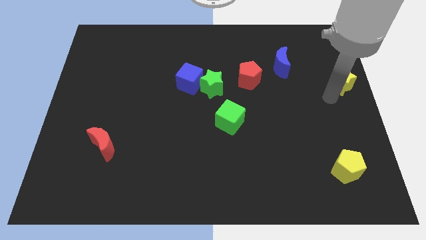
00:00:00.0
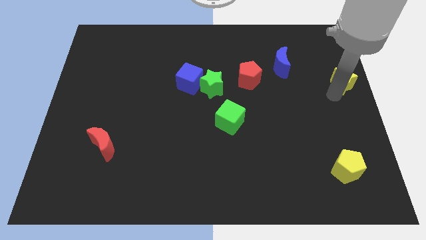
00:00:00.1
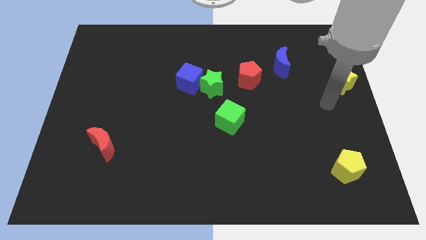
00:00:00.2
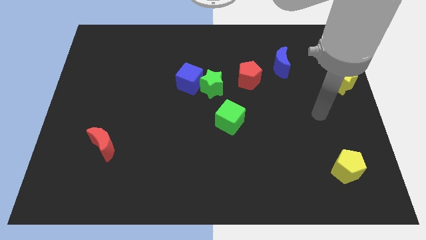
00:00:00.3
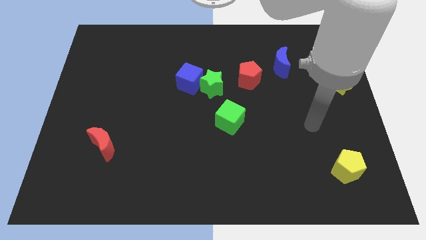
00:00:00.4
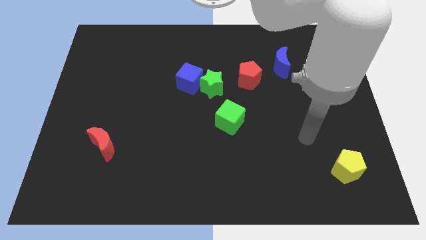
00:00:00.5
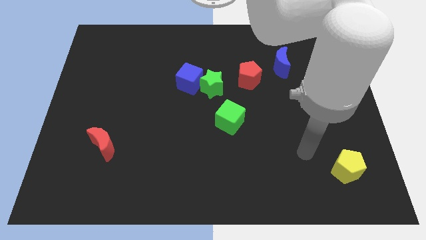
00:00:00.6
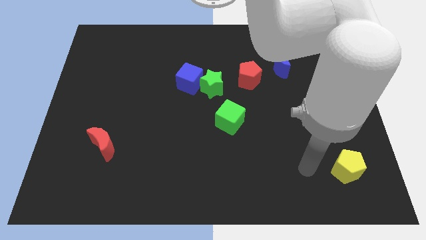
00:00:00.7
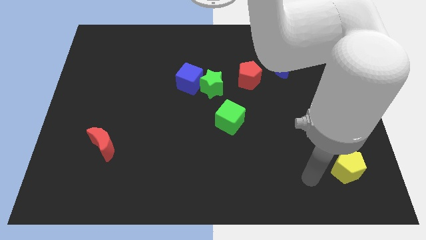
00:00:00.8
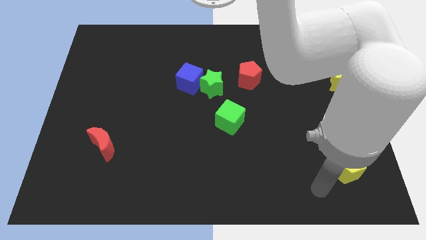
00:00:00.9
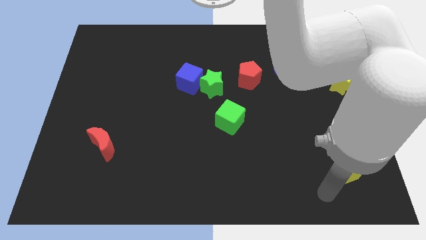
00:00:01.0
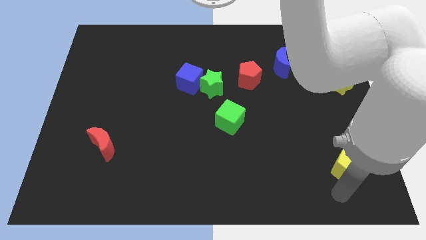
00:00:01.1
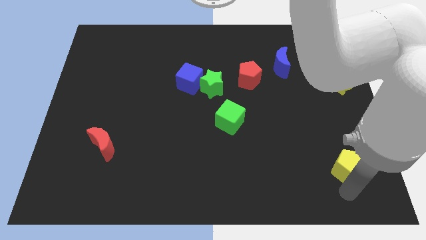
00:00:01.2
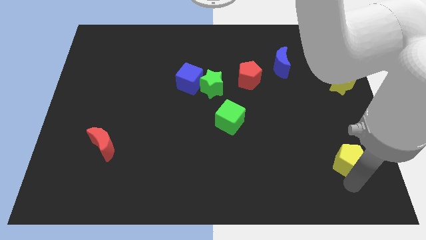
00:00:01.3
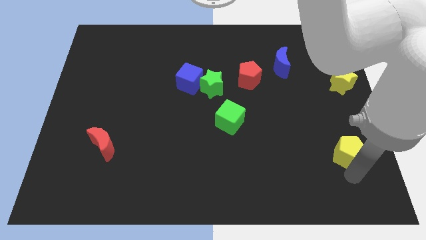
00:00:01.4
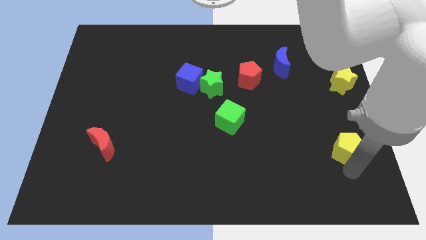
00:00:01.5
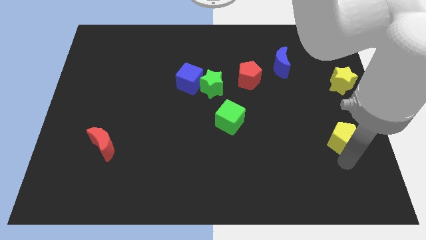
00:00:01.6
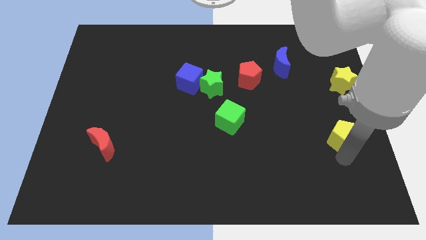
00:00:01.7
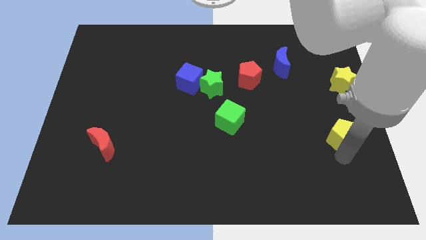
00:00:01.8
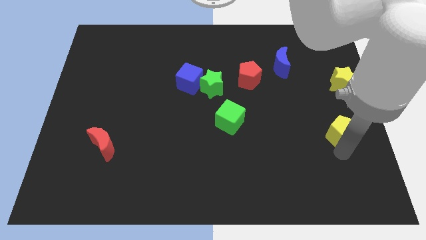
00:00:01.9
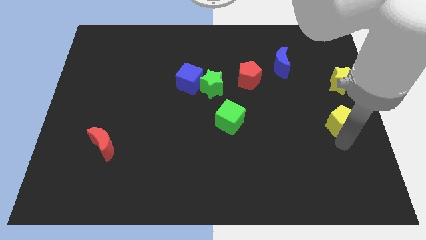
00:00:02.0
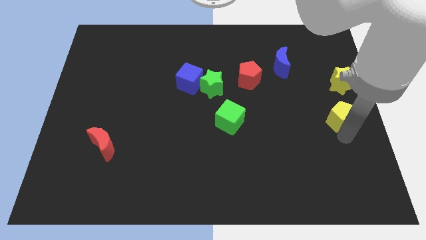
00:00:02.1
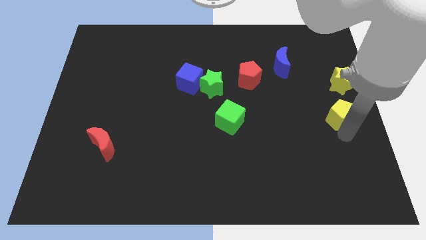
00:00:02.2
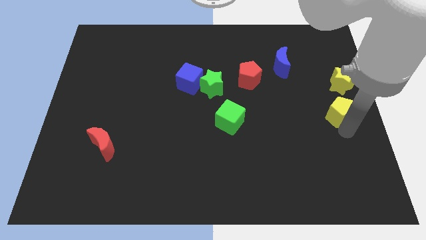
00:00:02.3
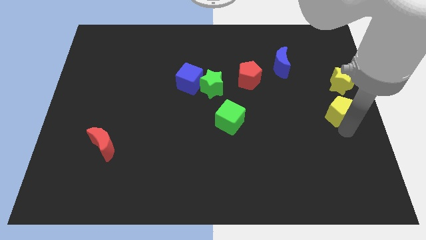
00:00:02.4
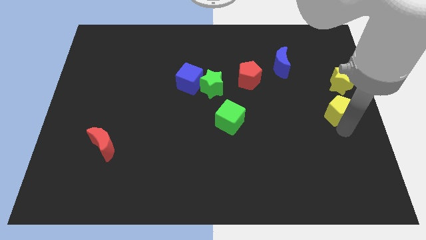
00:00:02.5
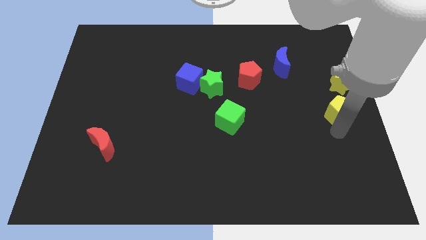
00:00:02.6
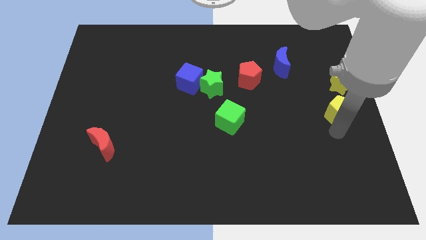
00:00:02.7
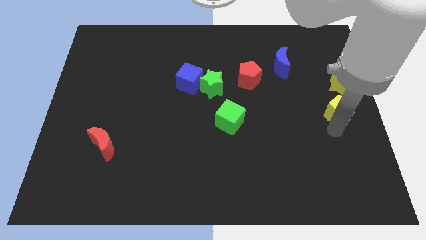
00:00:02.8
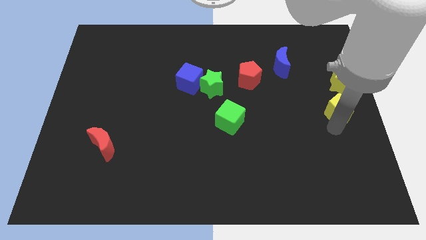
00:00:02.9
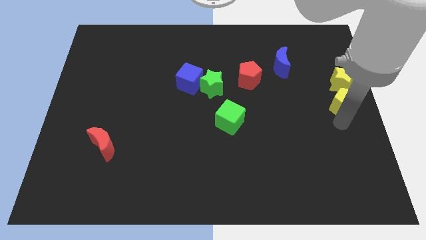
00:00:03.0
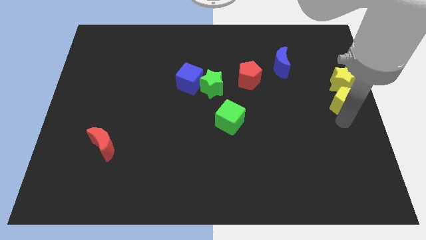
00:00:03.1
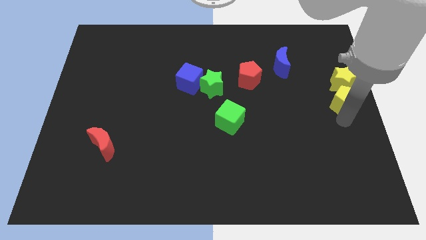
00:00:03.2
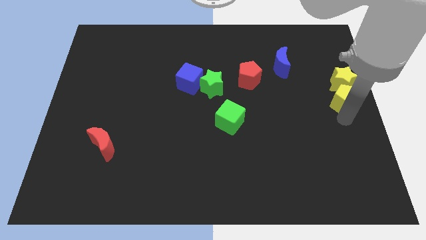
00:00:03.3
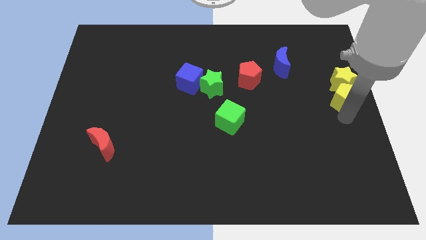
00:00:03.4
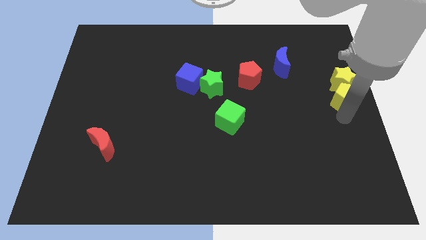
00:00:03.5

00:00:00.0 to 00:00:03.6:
slide the yellow pentagon to the bottom side of the yellow star

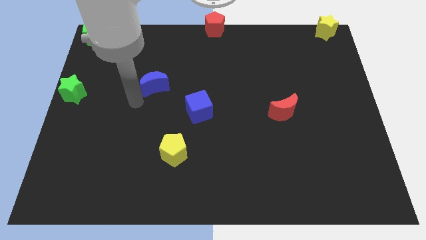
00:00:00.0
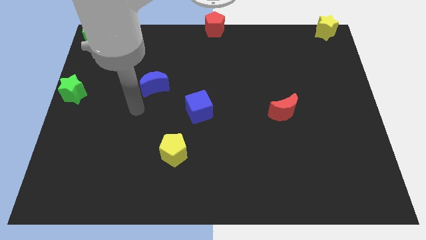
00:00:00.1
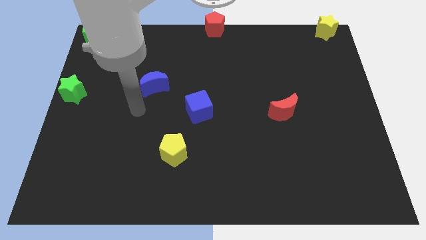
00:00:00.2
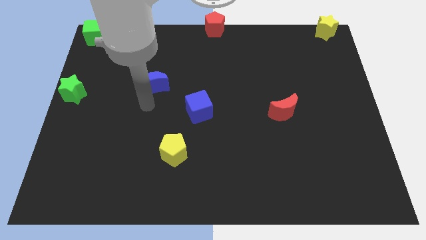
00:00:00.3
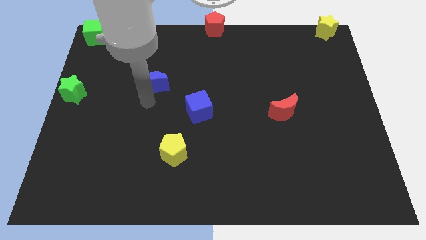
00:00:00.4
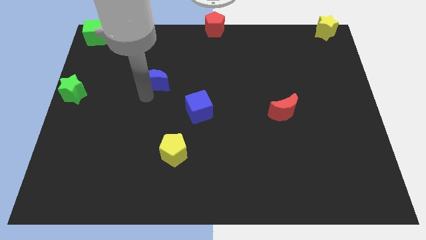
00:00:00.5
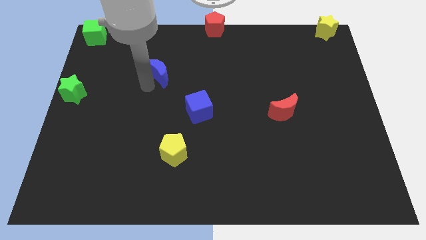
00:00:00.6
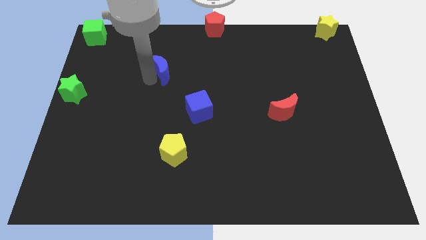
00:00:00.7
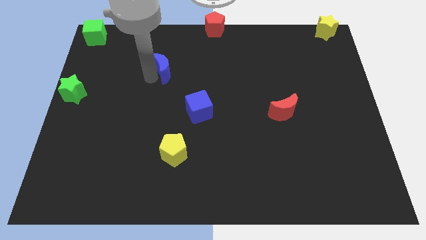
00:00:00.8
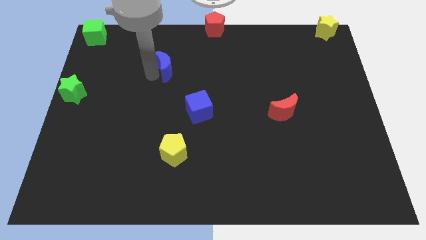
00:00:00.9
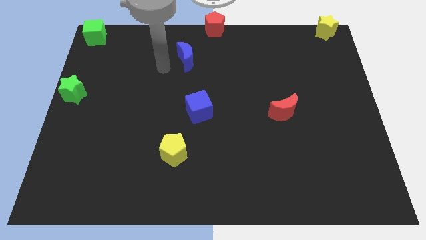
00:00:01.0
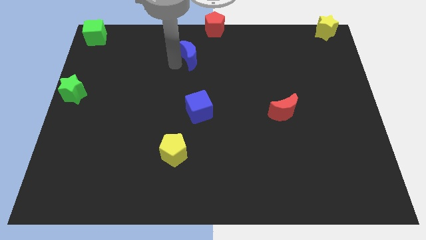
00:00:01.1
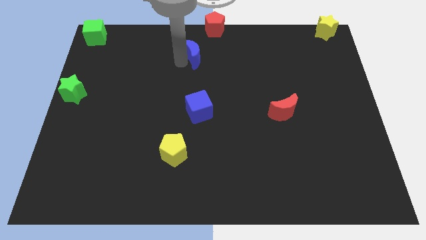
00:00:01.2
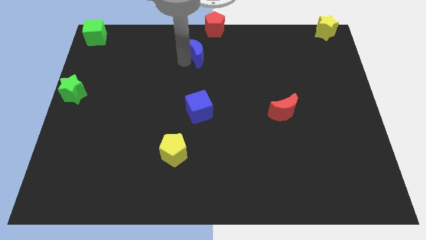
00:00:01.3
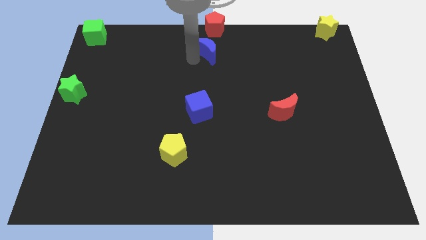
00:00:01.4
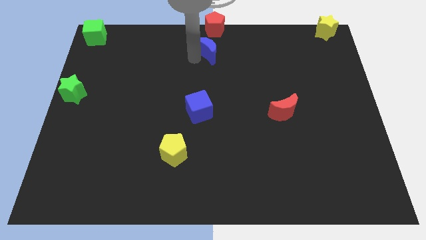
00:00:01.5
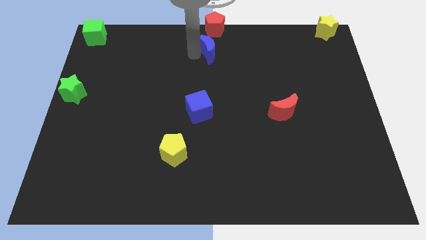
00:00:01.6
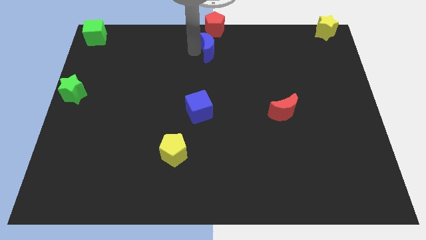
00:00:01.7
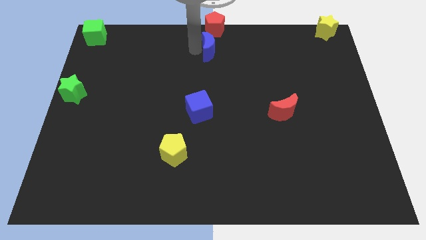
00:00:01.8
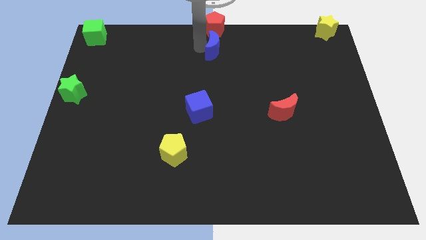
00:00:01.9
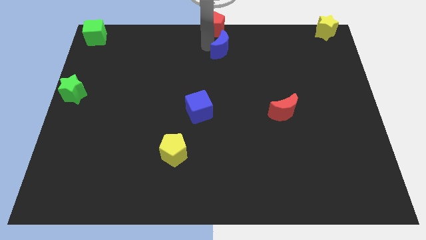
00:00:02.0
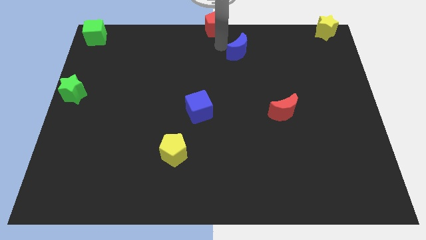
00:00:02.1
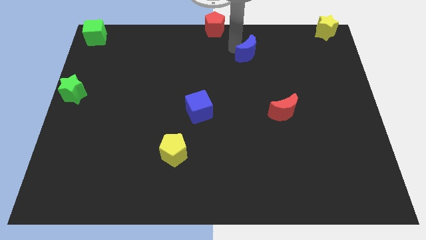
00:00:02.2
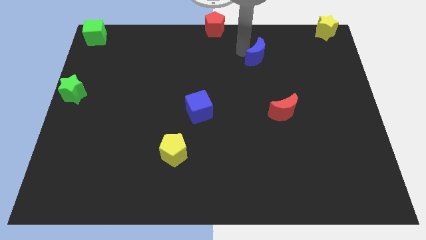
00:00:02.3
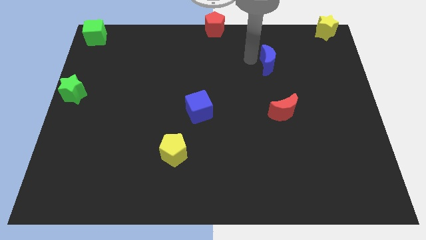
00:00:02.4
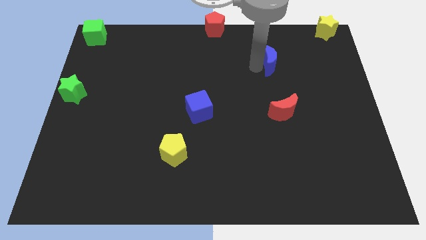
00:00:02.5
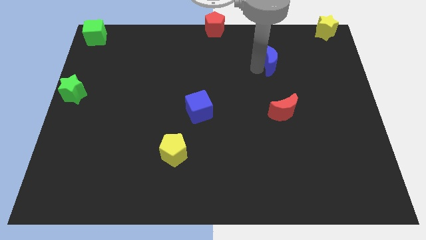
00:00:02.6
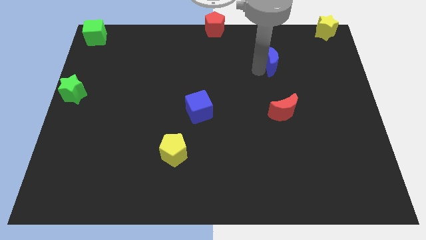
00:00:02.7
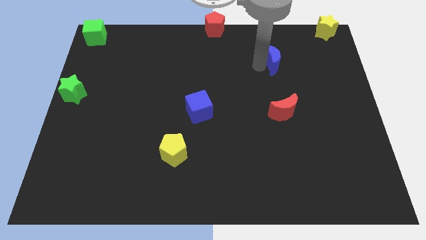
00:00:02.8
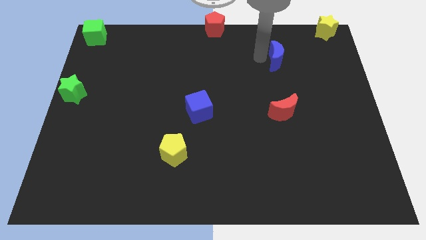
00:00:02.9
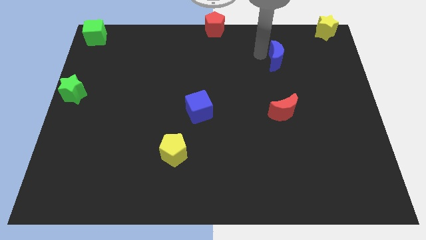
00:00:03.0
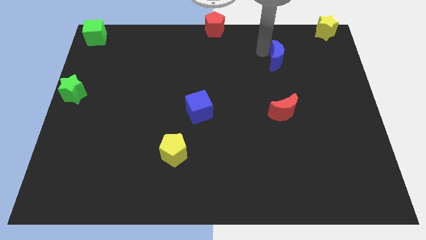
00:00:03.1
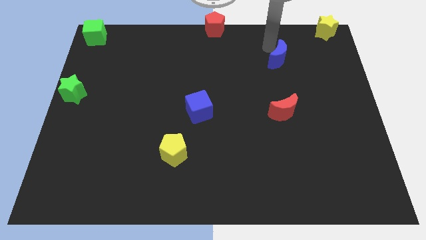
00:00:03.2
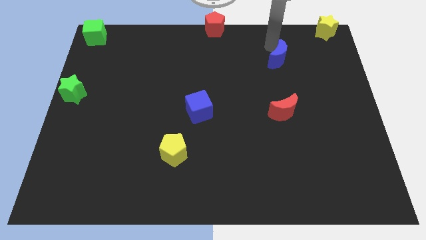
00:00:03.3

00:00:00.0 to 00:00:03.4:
move the blue moon diagonally bottom right to the red pentagon

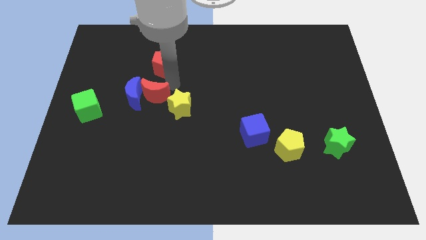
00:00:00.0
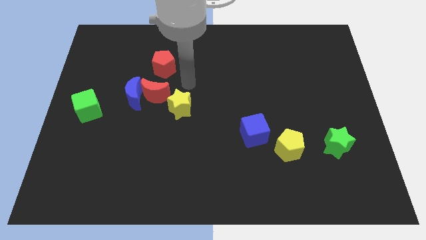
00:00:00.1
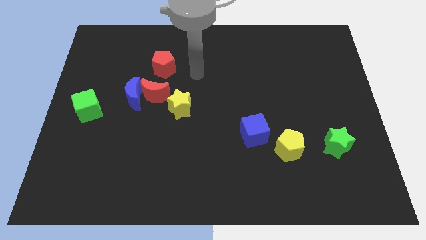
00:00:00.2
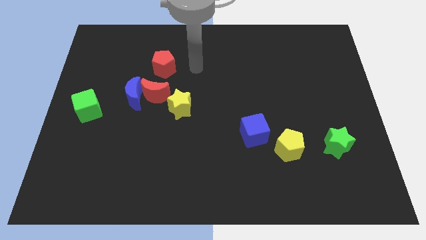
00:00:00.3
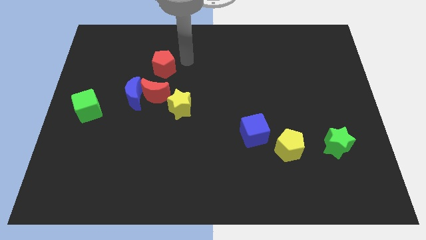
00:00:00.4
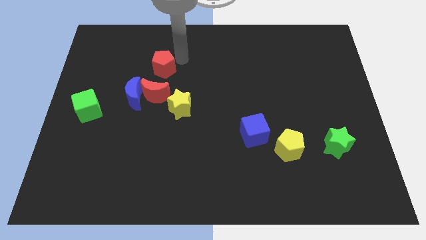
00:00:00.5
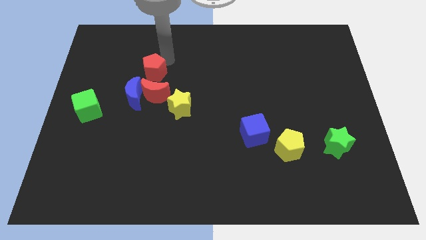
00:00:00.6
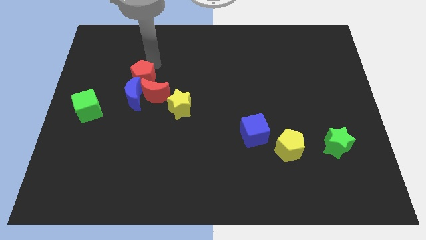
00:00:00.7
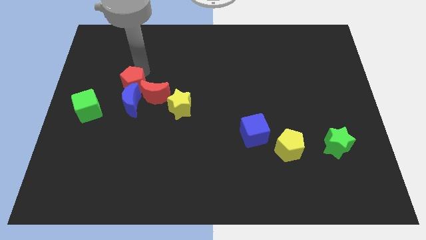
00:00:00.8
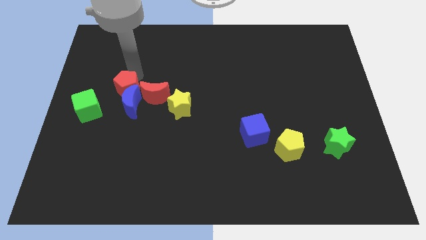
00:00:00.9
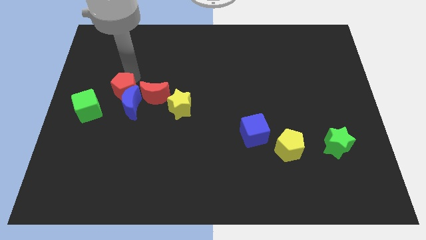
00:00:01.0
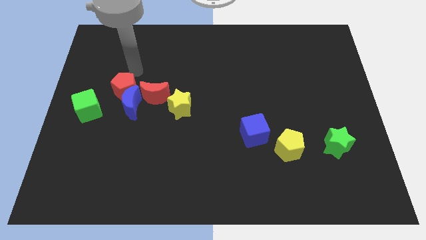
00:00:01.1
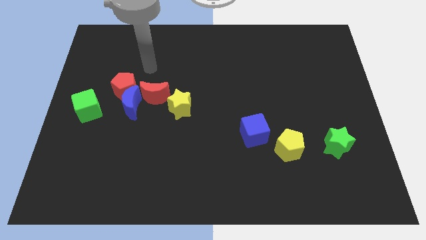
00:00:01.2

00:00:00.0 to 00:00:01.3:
push the red pentagon in to the blue crescent

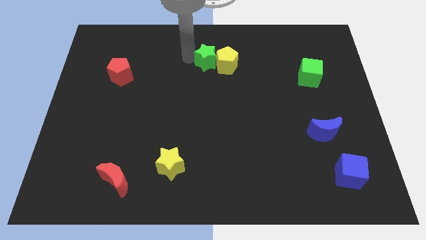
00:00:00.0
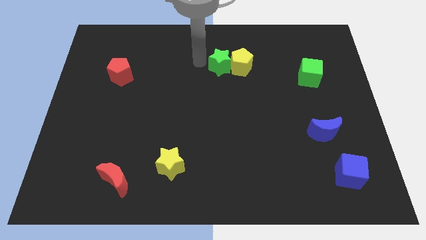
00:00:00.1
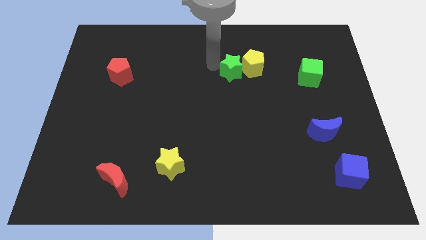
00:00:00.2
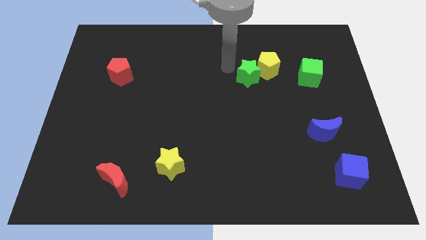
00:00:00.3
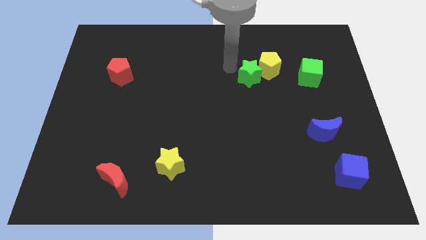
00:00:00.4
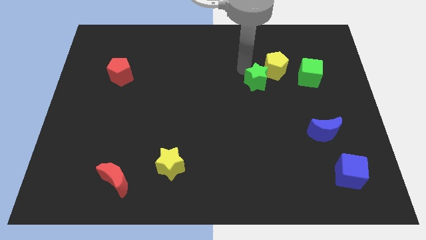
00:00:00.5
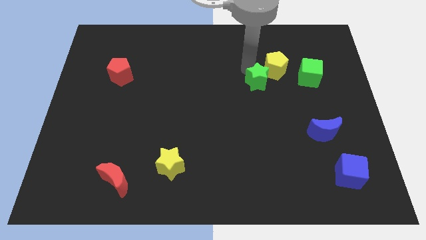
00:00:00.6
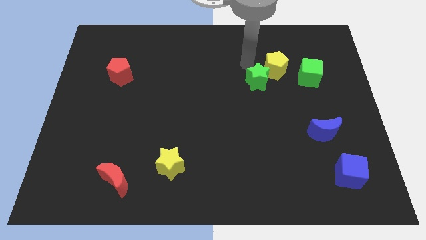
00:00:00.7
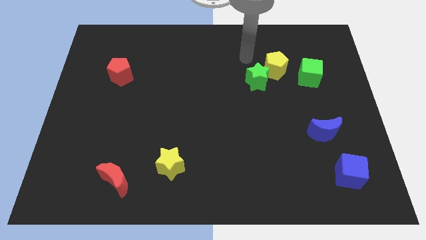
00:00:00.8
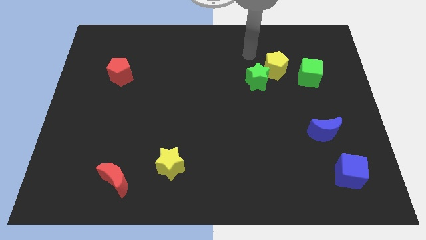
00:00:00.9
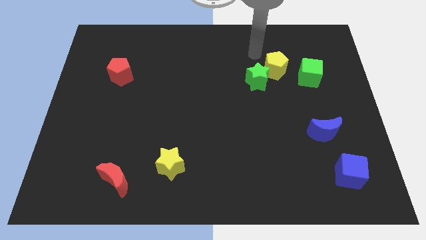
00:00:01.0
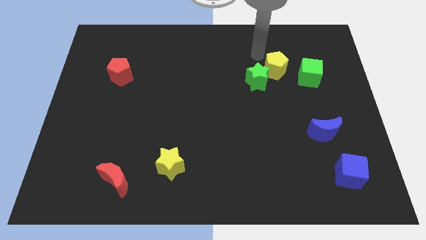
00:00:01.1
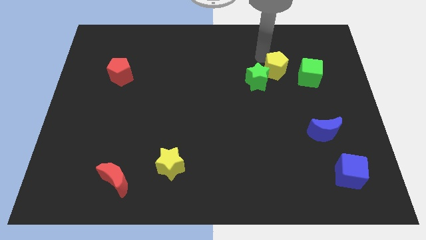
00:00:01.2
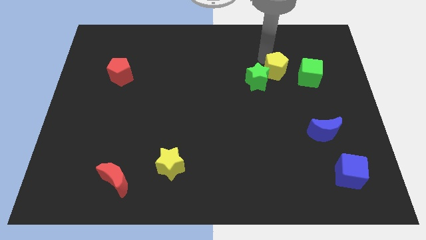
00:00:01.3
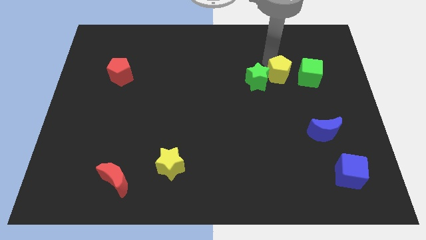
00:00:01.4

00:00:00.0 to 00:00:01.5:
push the green star and yellow pentagon to the left of the green cube
